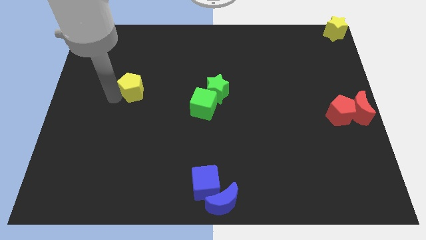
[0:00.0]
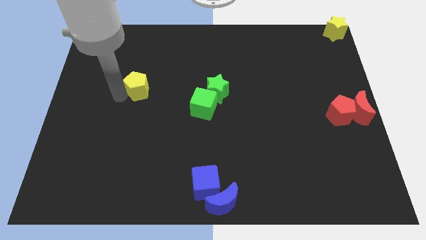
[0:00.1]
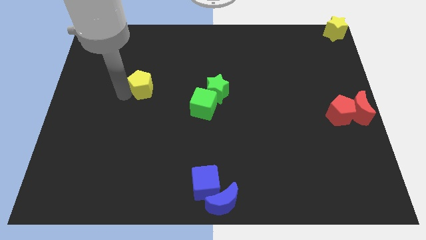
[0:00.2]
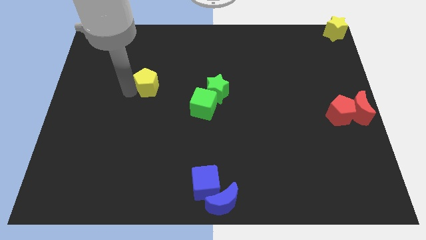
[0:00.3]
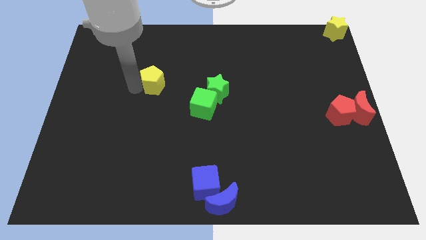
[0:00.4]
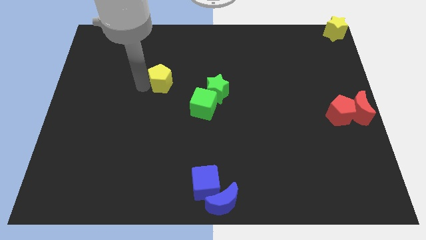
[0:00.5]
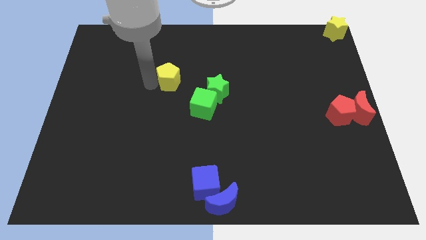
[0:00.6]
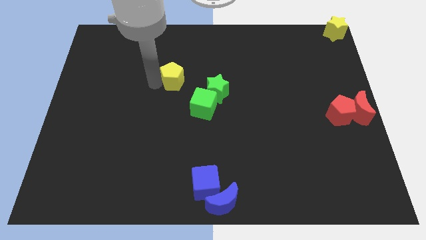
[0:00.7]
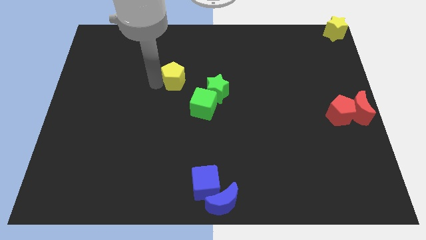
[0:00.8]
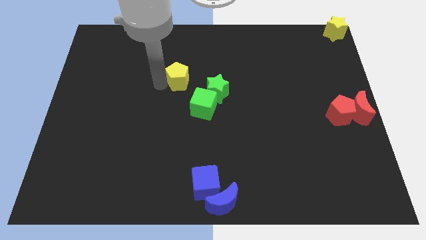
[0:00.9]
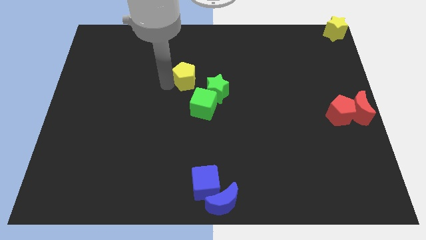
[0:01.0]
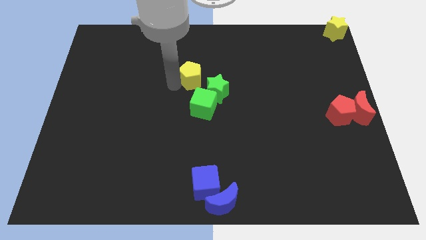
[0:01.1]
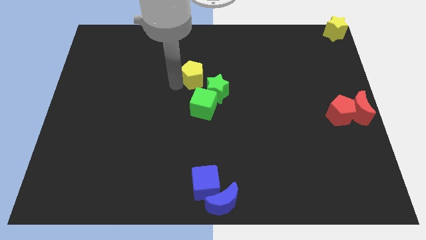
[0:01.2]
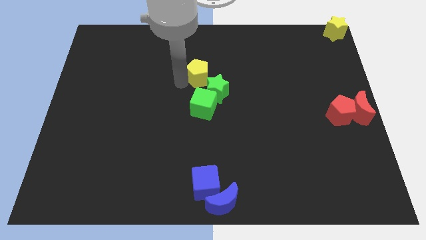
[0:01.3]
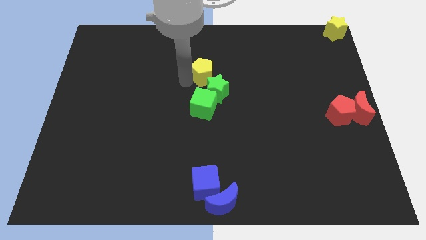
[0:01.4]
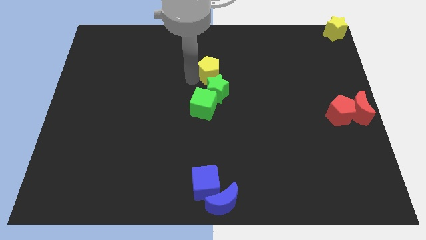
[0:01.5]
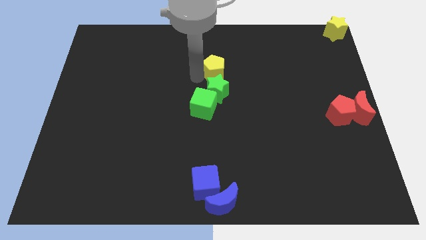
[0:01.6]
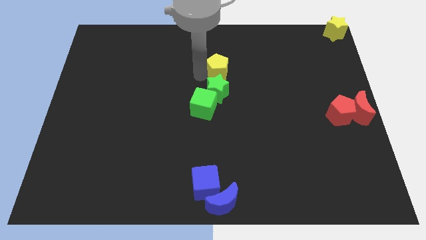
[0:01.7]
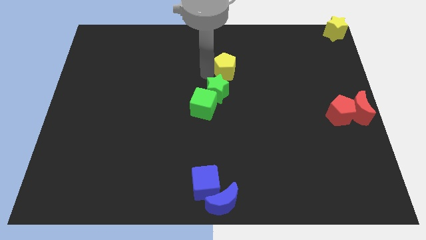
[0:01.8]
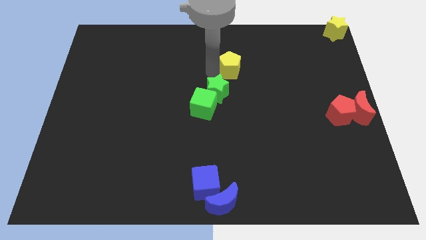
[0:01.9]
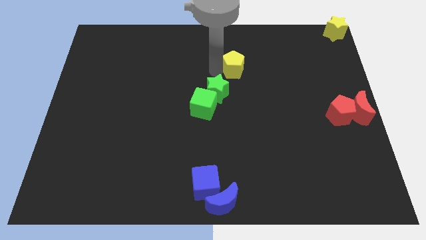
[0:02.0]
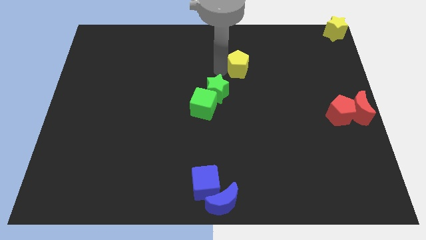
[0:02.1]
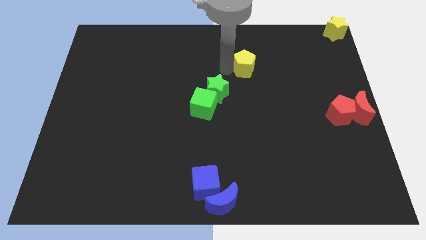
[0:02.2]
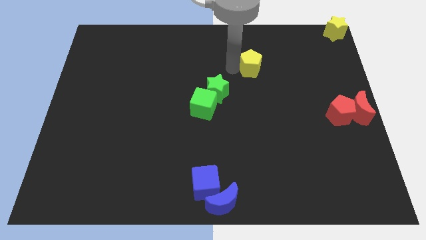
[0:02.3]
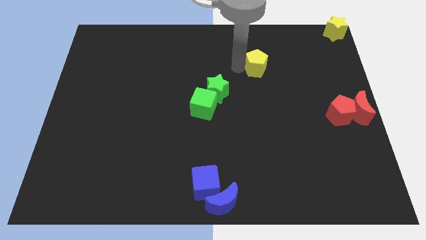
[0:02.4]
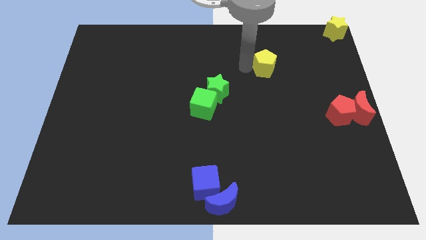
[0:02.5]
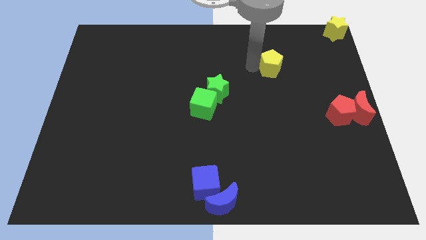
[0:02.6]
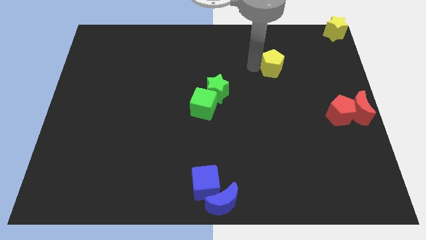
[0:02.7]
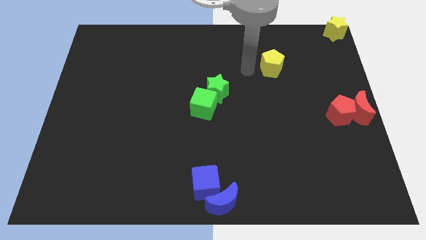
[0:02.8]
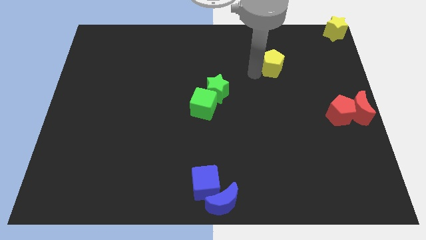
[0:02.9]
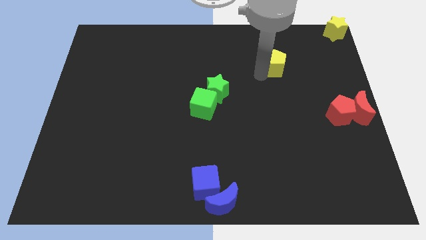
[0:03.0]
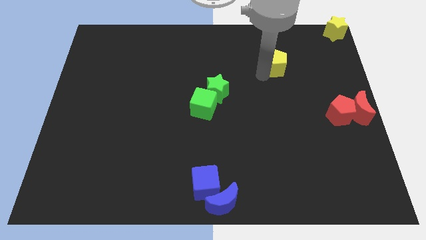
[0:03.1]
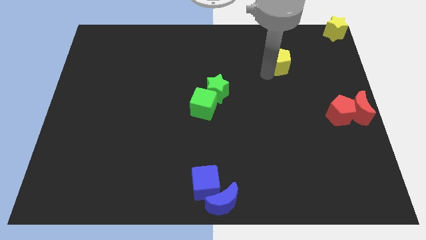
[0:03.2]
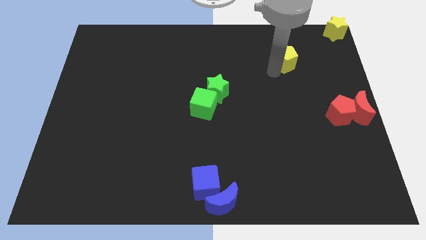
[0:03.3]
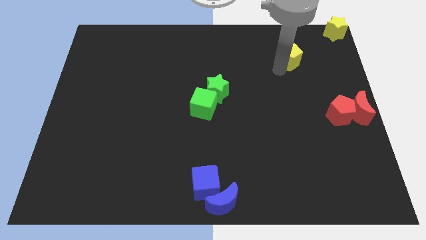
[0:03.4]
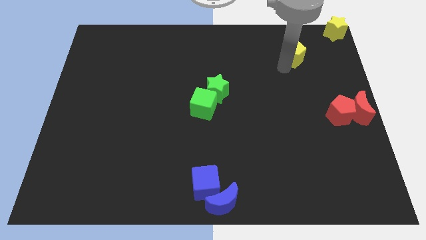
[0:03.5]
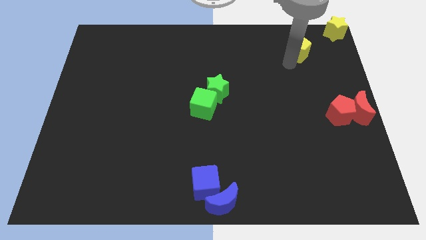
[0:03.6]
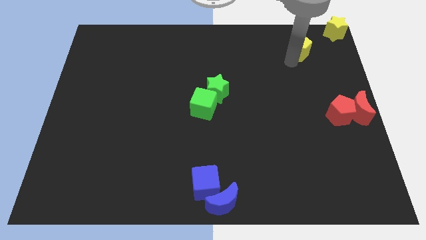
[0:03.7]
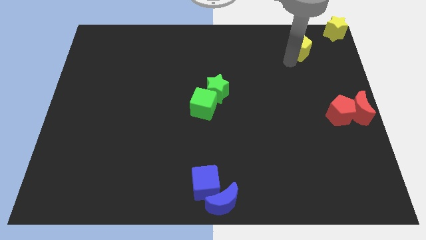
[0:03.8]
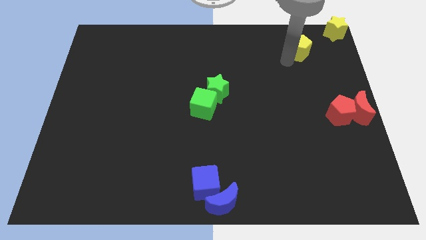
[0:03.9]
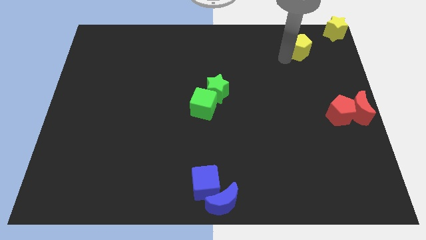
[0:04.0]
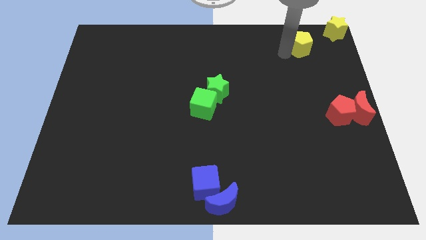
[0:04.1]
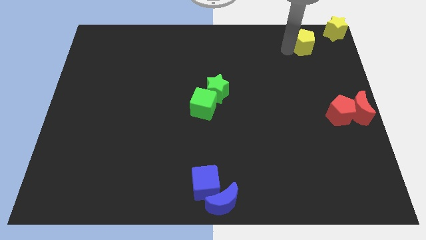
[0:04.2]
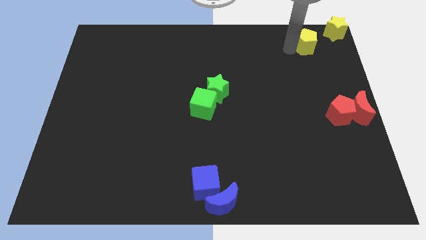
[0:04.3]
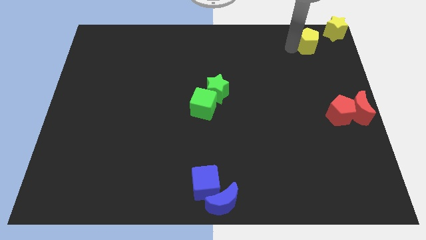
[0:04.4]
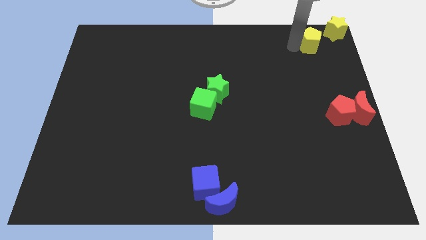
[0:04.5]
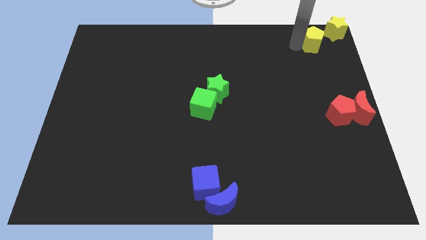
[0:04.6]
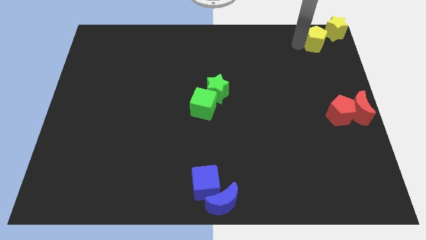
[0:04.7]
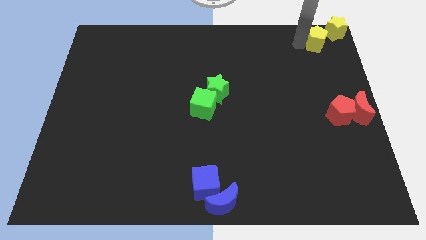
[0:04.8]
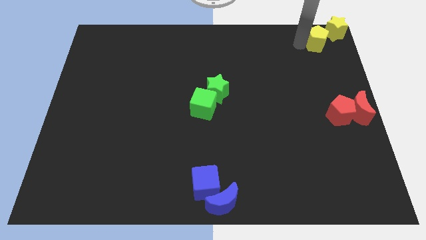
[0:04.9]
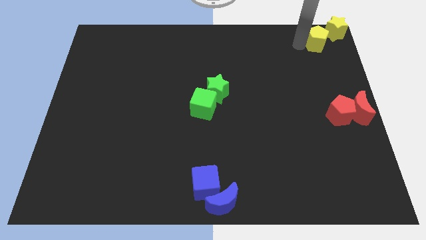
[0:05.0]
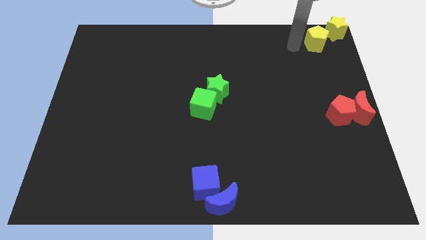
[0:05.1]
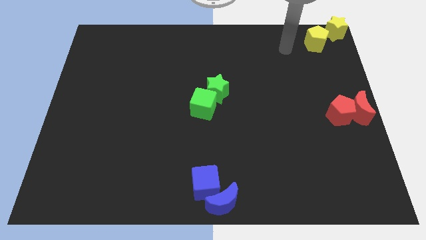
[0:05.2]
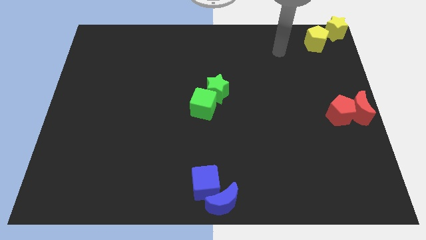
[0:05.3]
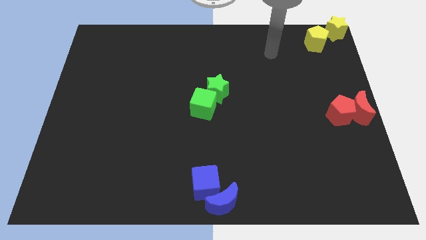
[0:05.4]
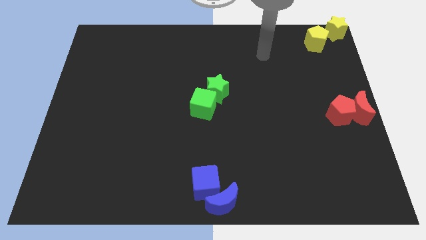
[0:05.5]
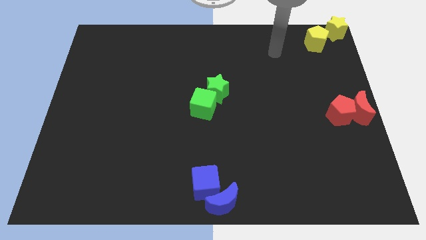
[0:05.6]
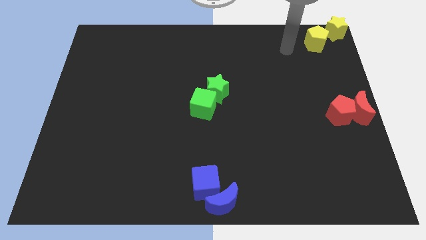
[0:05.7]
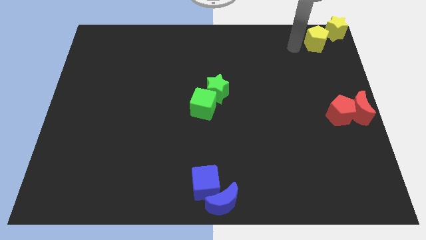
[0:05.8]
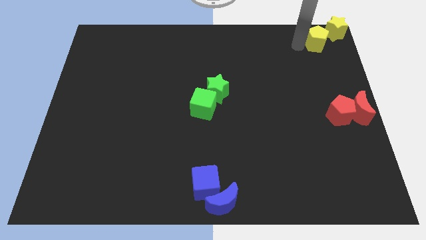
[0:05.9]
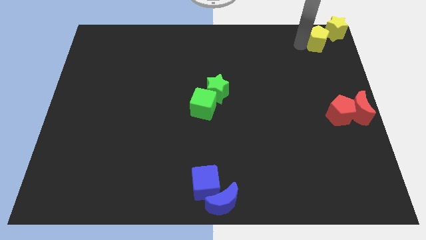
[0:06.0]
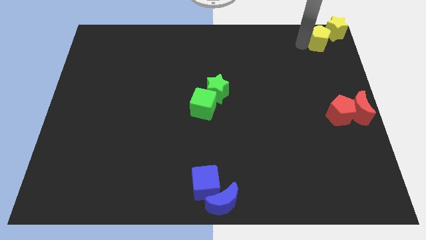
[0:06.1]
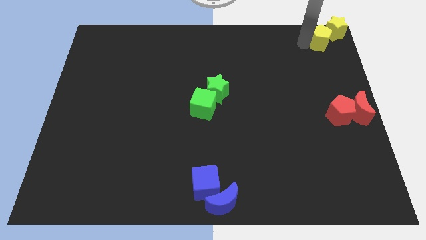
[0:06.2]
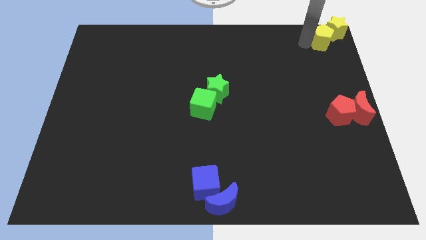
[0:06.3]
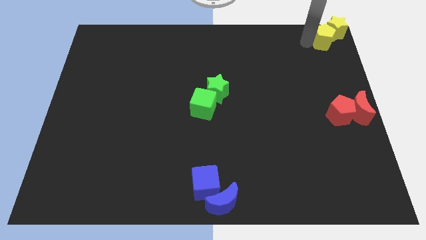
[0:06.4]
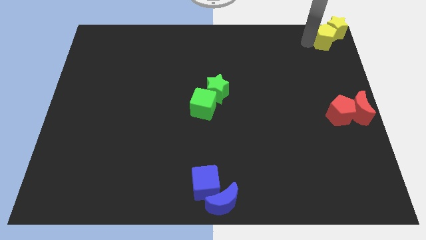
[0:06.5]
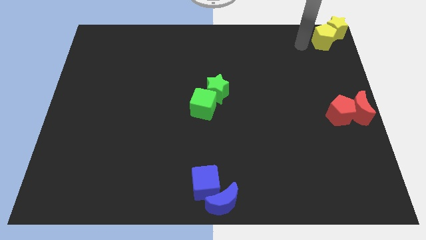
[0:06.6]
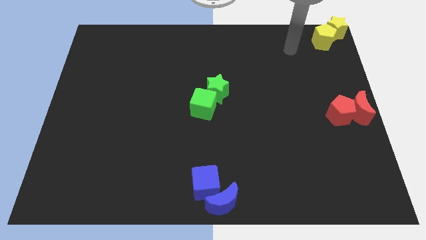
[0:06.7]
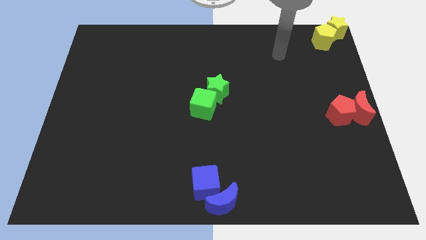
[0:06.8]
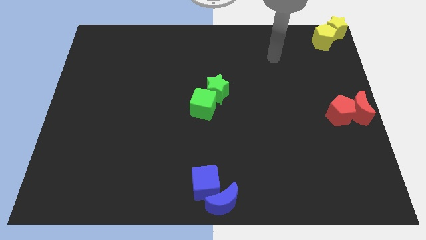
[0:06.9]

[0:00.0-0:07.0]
place the yellow pentagon near the yellow star to the top right corner of the black board

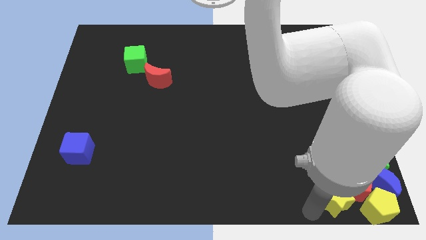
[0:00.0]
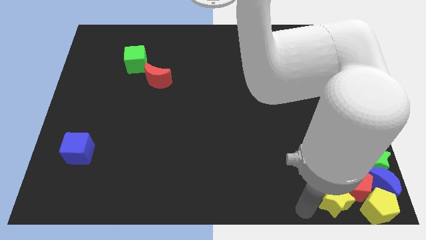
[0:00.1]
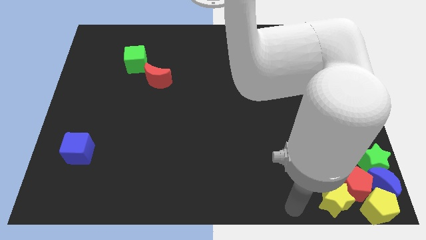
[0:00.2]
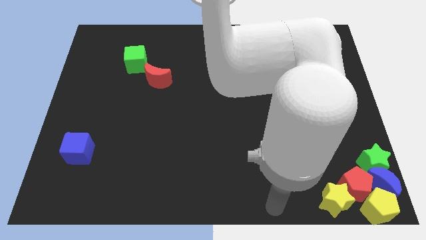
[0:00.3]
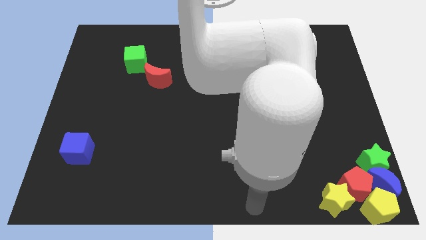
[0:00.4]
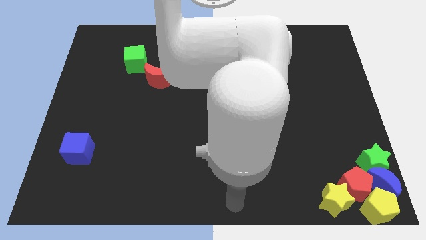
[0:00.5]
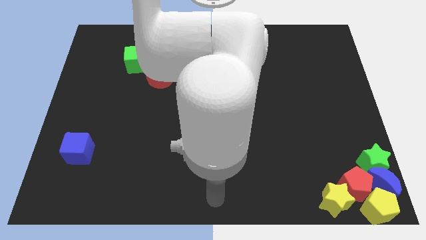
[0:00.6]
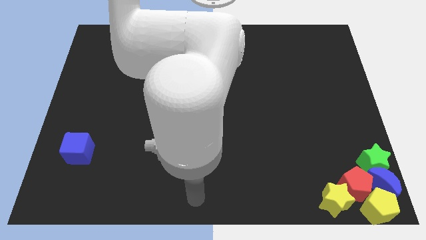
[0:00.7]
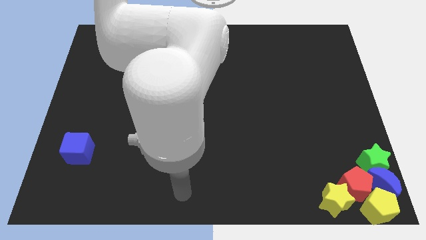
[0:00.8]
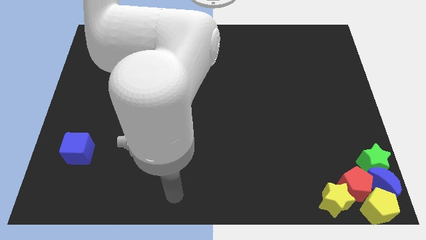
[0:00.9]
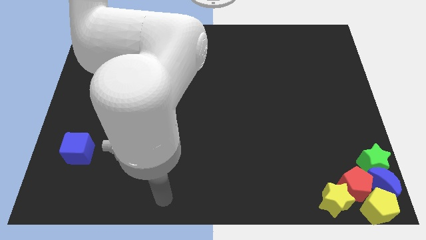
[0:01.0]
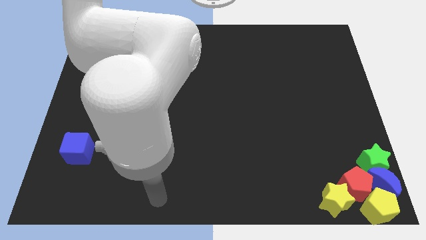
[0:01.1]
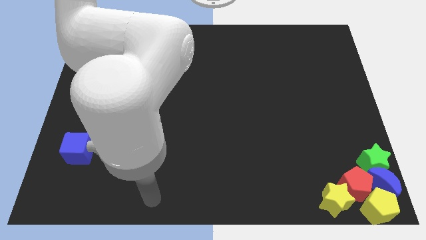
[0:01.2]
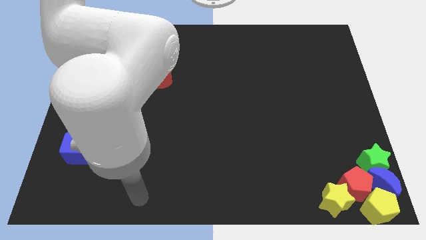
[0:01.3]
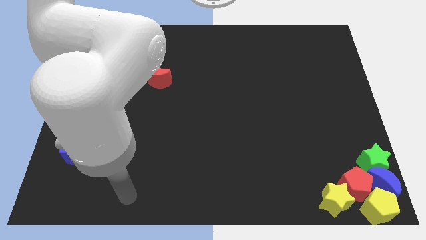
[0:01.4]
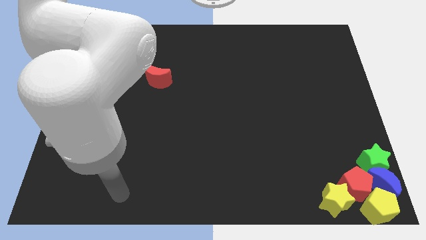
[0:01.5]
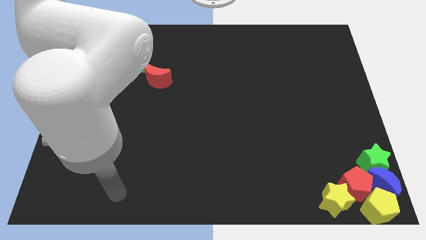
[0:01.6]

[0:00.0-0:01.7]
move the arm to the left side of the board

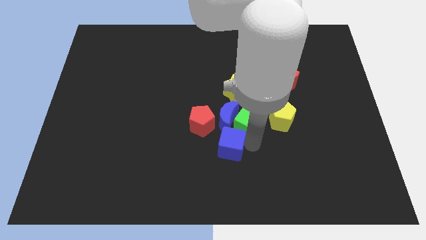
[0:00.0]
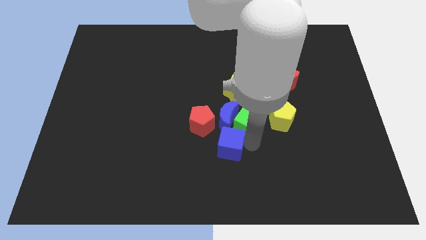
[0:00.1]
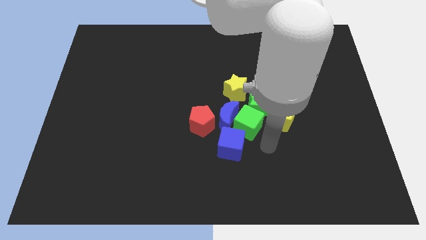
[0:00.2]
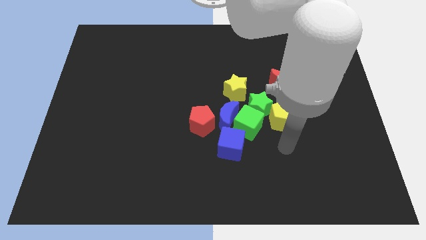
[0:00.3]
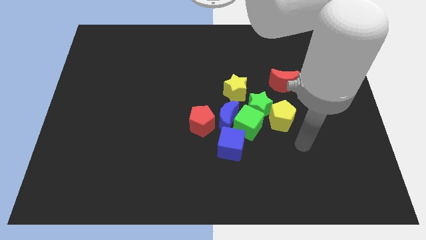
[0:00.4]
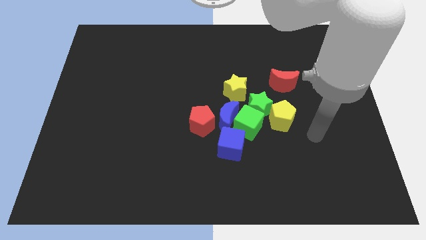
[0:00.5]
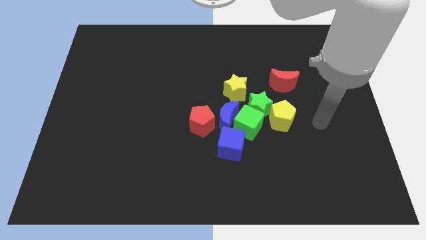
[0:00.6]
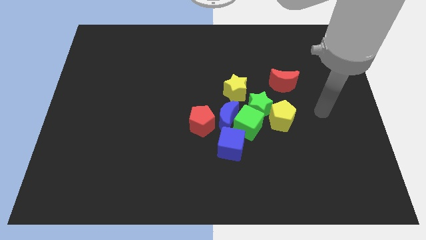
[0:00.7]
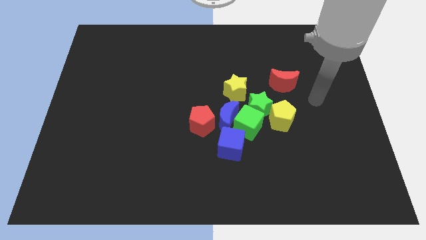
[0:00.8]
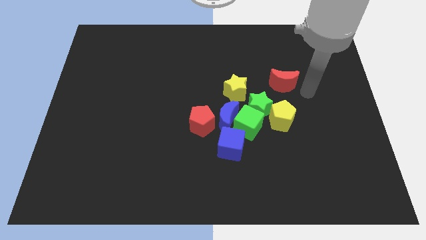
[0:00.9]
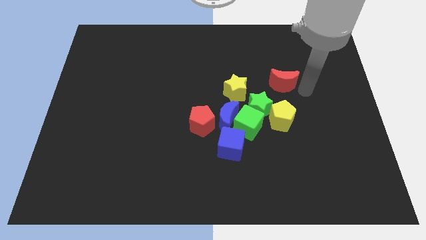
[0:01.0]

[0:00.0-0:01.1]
move your arm away from the blue cube
